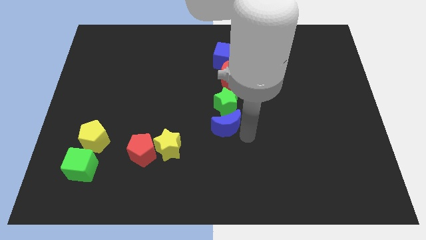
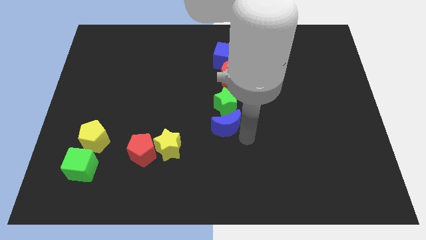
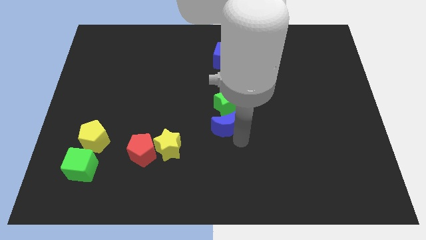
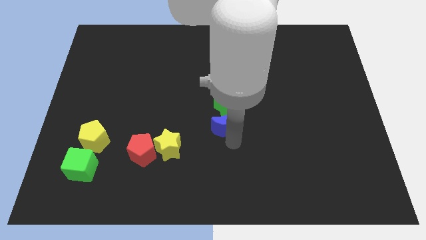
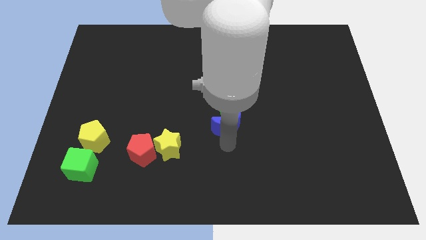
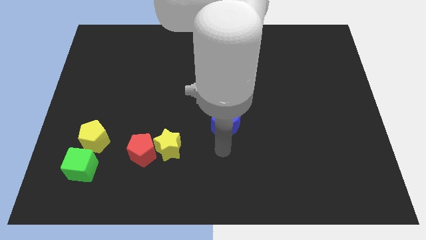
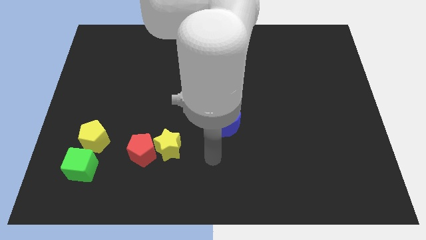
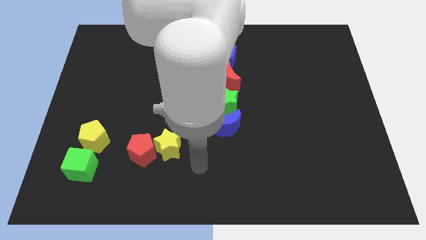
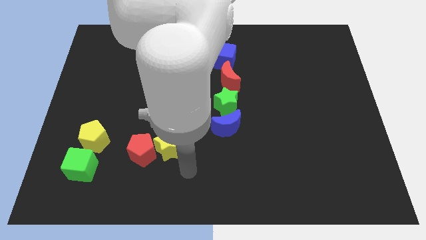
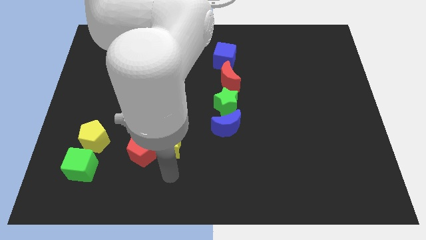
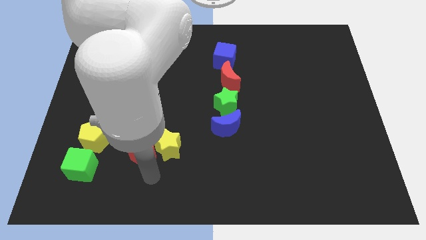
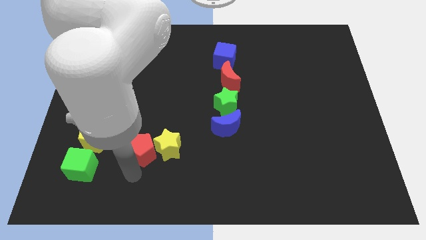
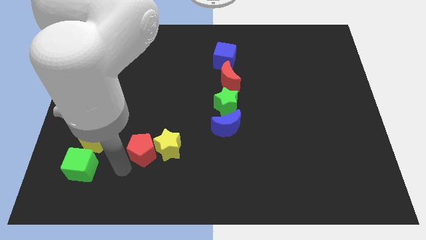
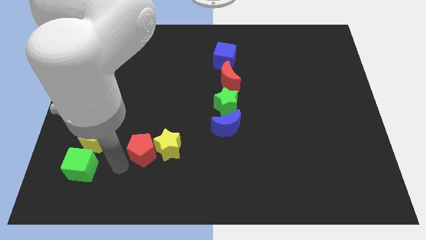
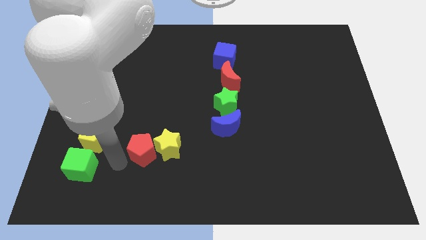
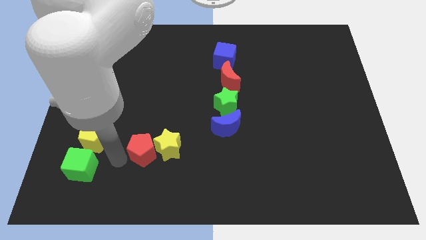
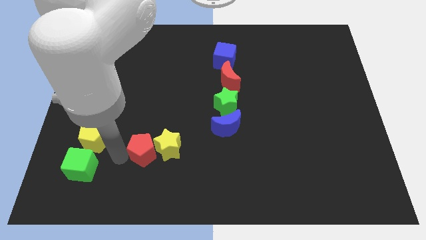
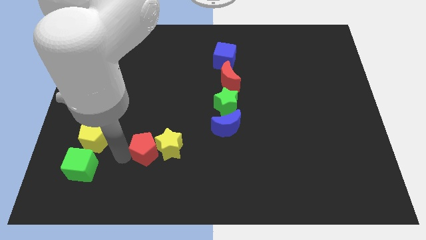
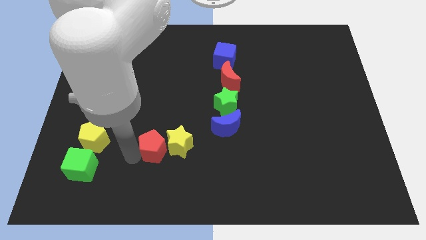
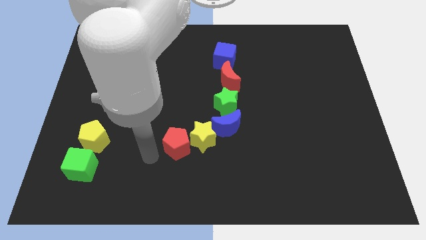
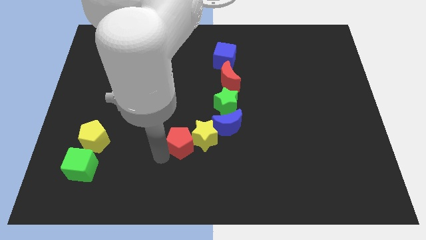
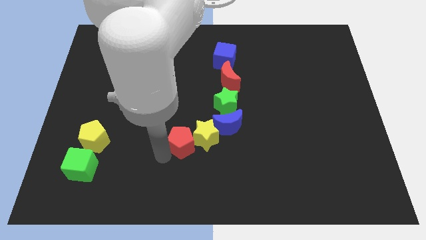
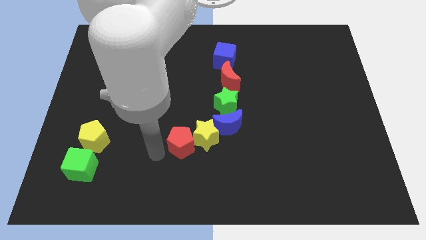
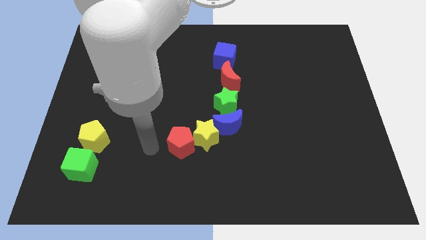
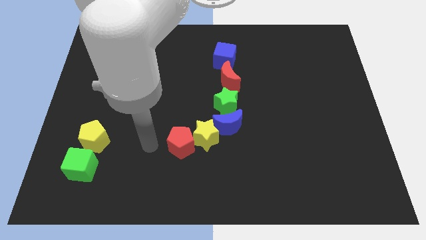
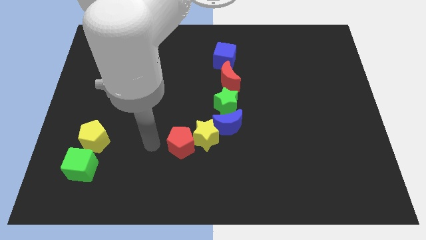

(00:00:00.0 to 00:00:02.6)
push the red pentagon and yellow star towards the blue moon

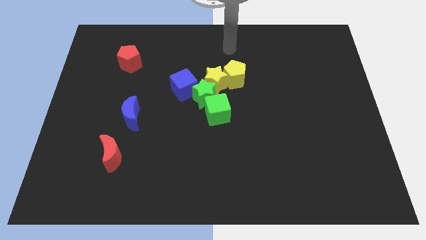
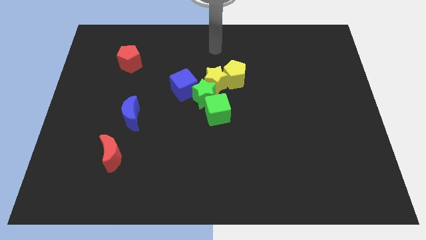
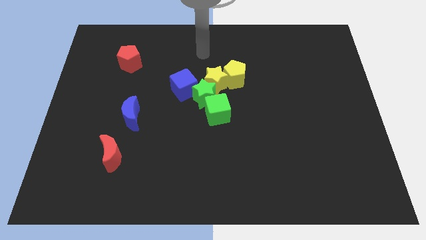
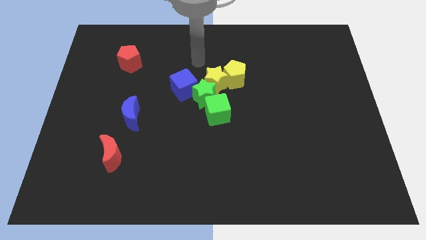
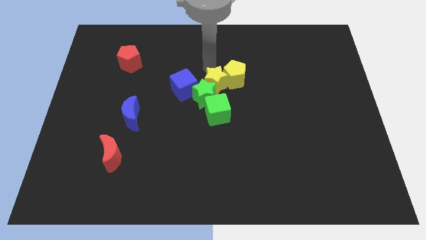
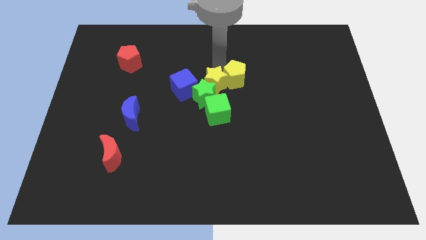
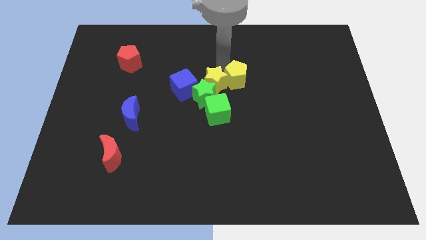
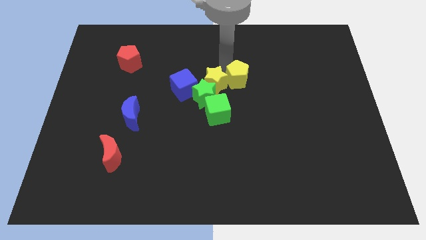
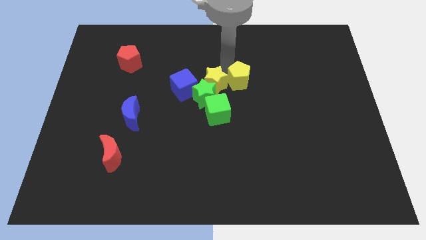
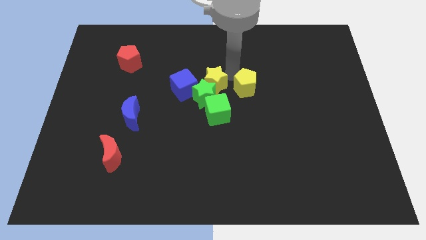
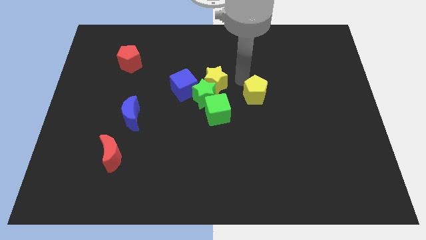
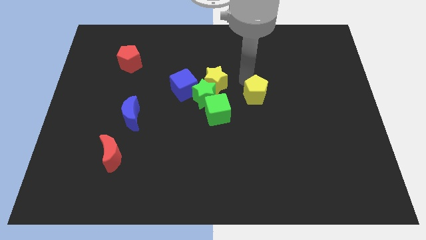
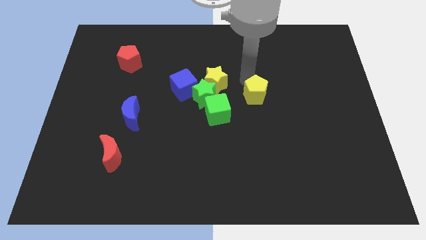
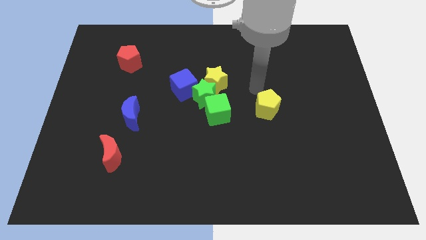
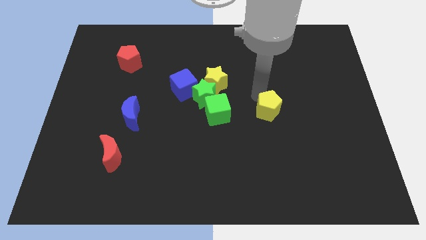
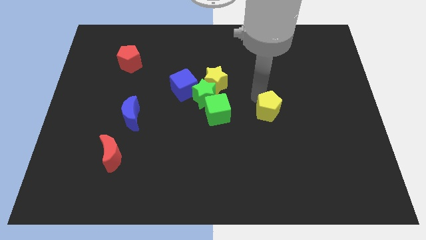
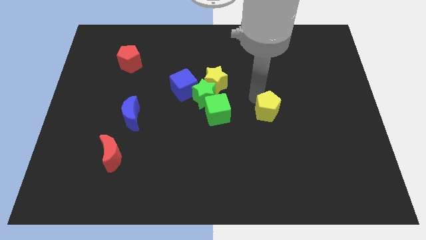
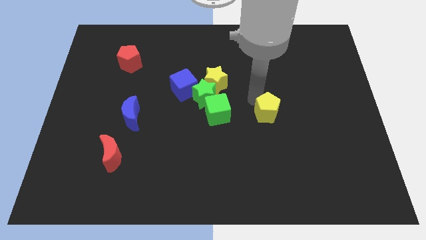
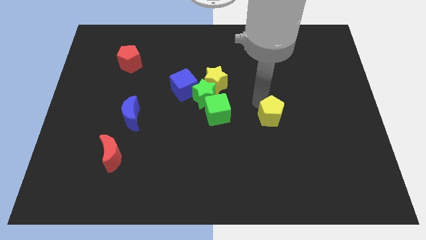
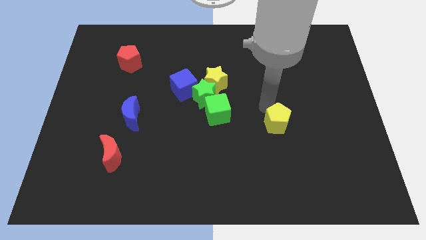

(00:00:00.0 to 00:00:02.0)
separate yellow pentagon from yellow star

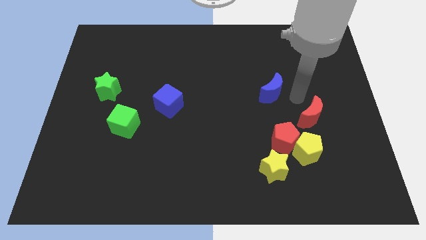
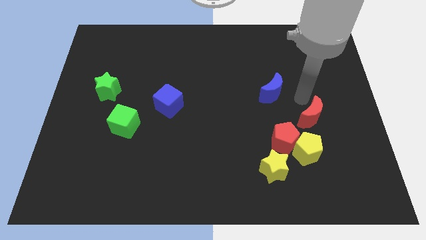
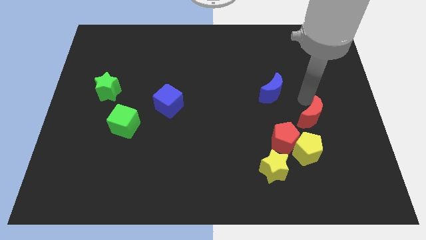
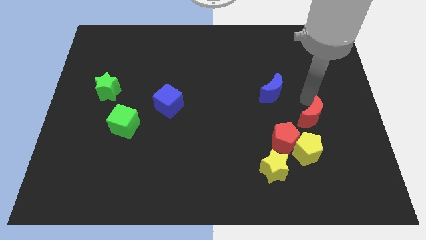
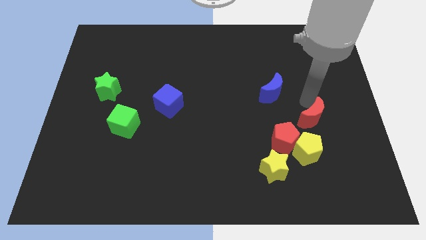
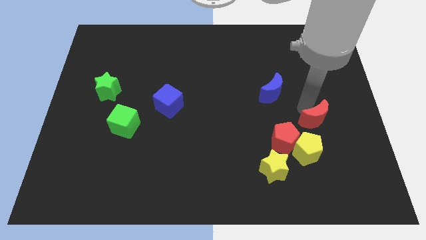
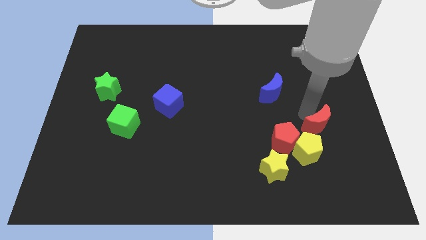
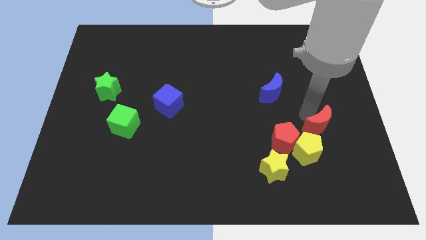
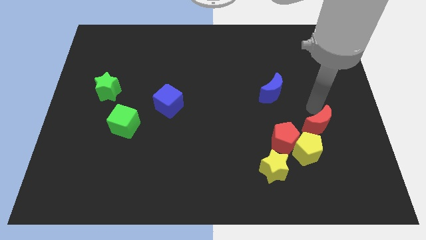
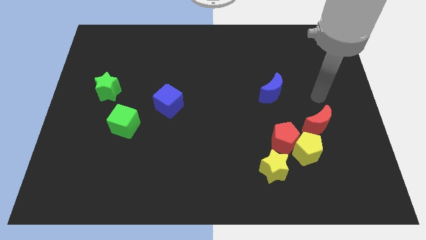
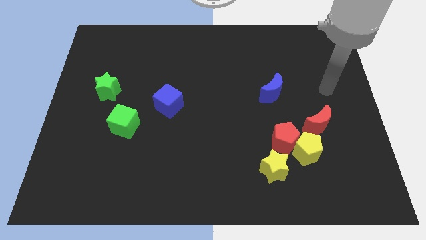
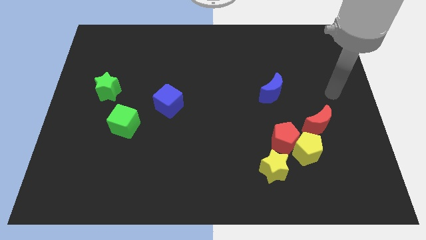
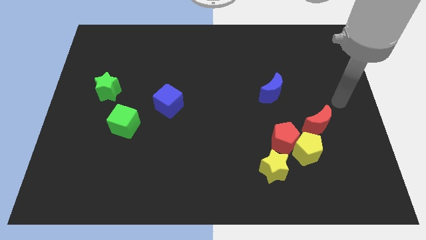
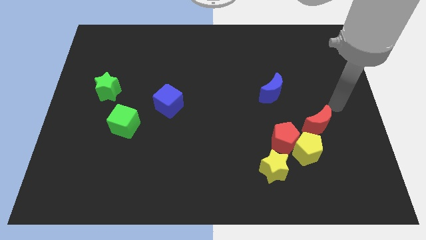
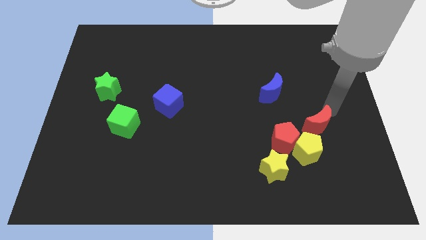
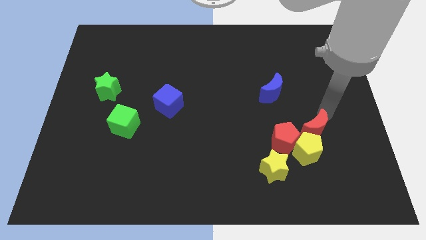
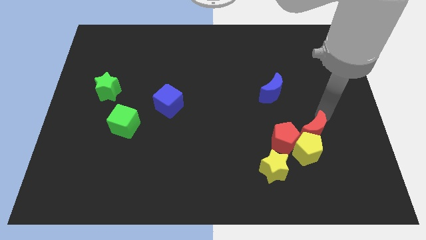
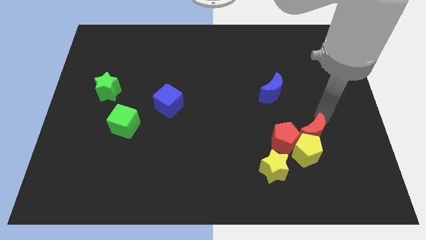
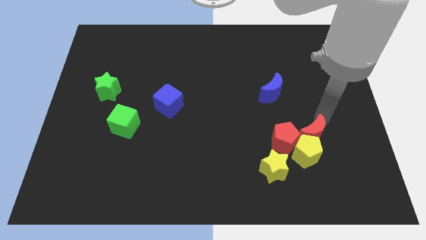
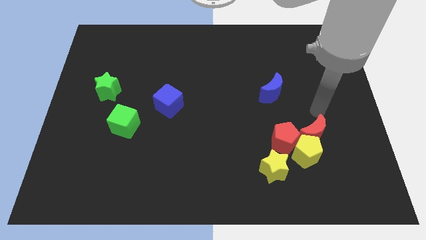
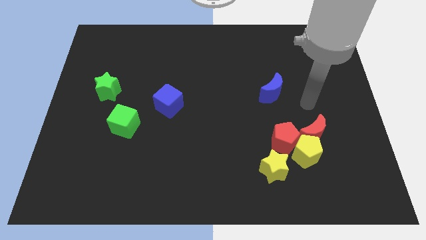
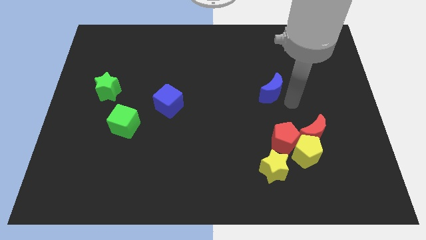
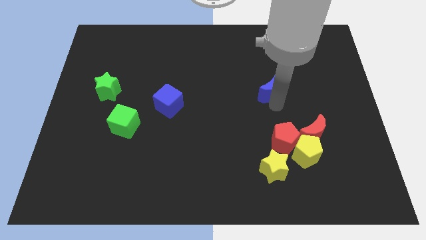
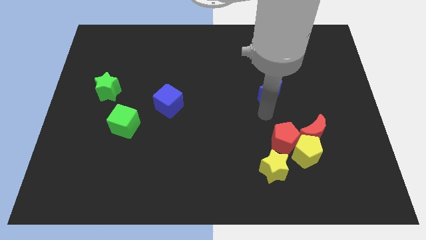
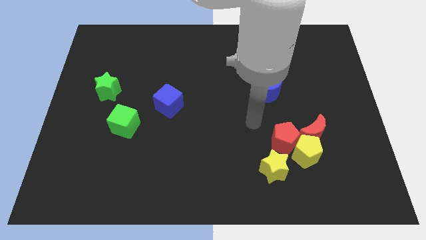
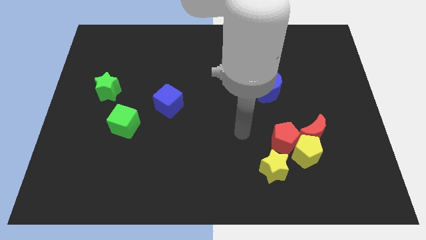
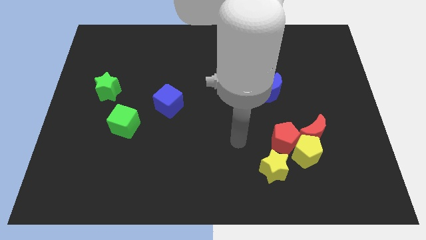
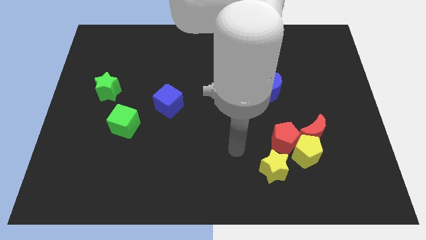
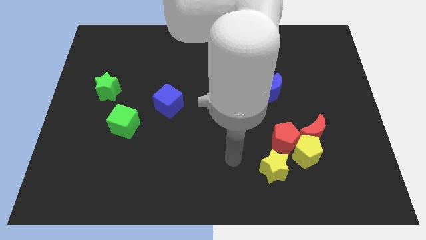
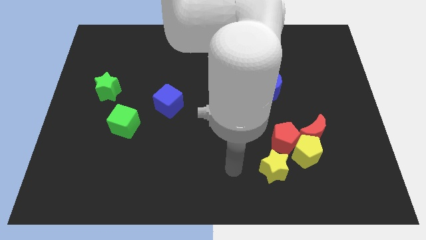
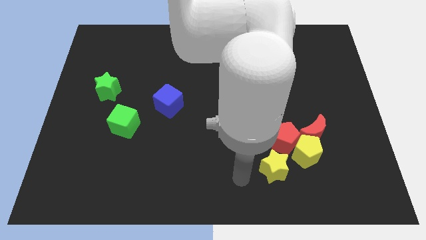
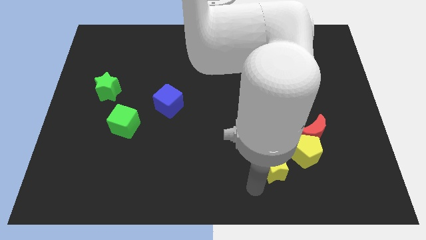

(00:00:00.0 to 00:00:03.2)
push the red crescent close to the yellow pentagon

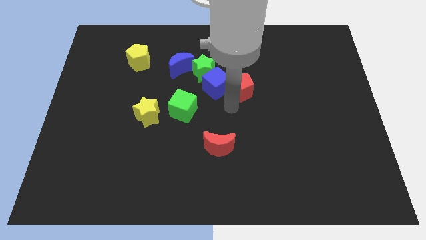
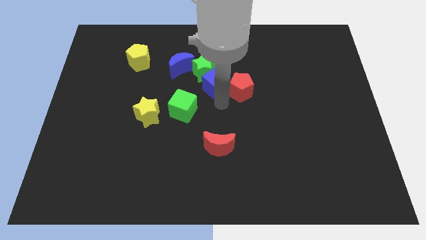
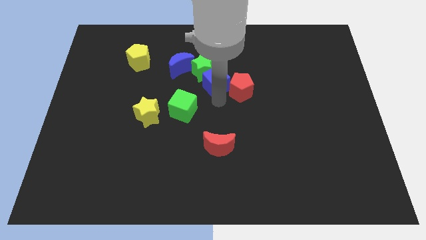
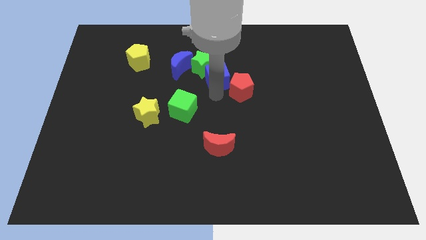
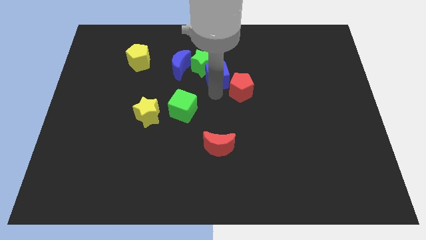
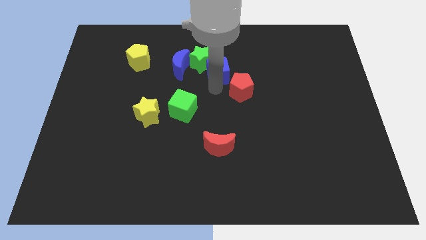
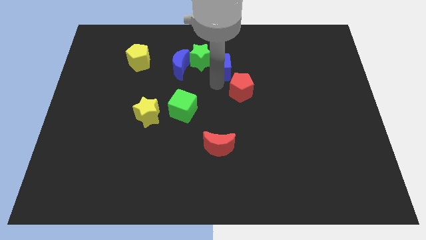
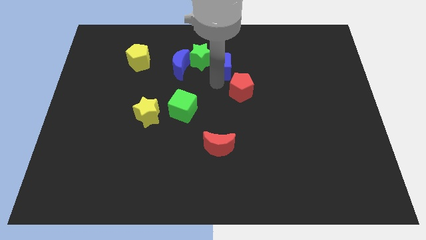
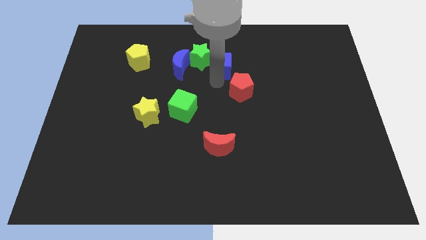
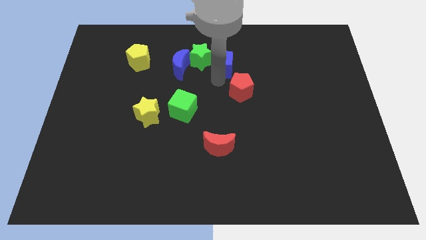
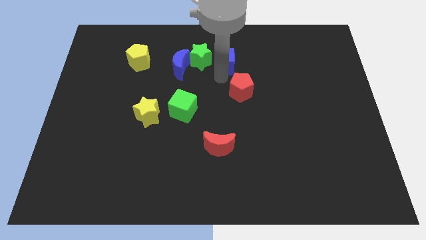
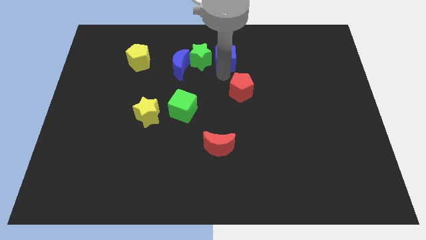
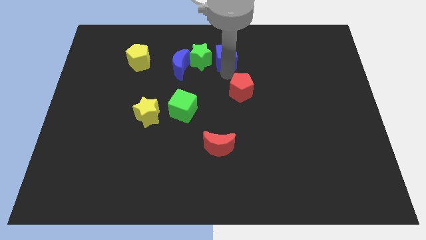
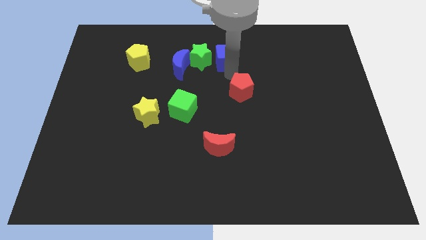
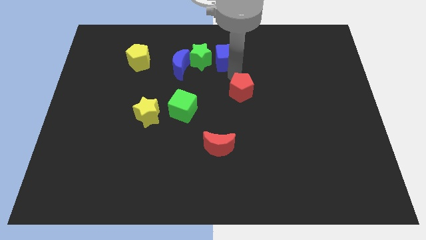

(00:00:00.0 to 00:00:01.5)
separate the blue cube from the green star and red pentagon
